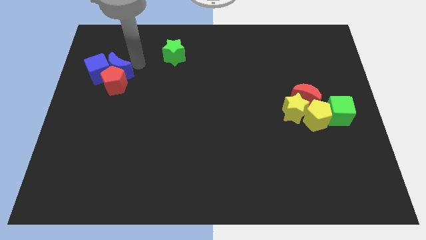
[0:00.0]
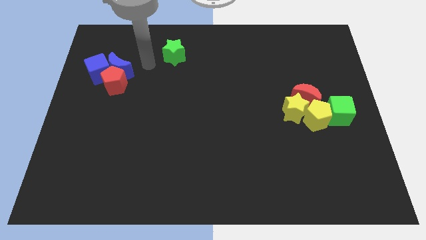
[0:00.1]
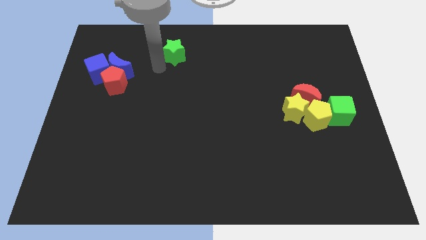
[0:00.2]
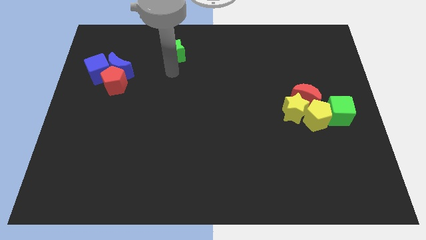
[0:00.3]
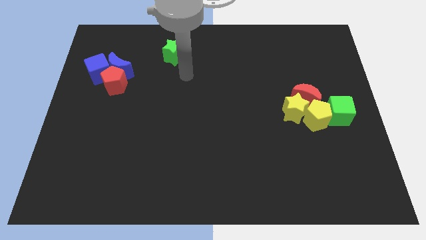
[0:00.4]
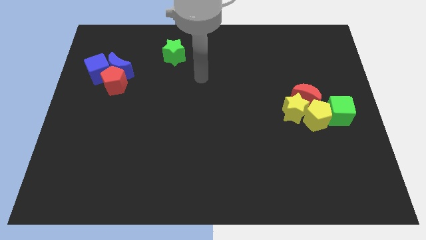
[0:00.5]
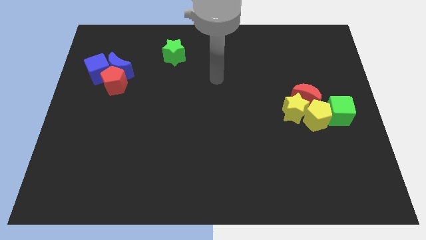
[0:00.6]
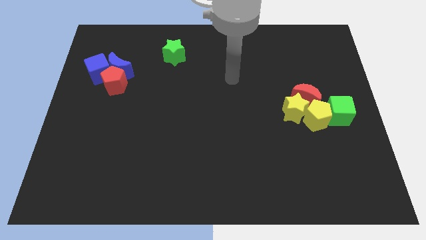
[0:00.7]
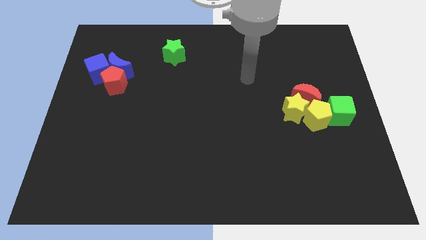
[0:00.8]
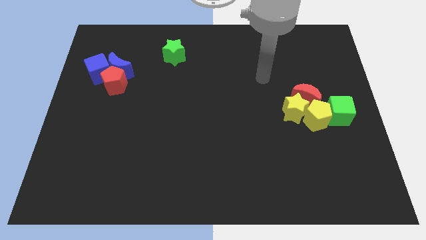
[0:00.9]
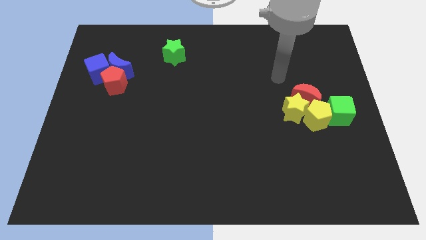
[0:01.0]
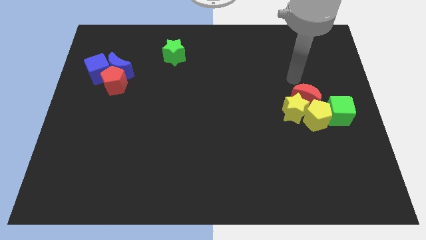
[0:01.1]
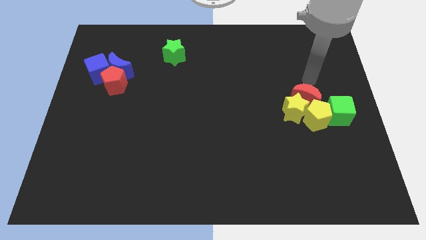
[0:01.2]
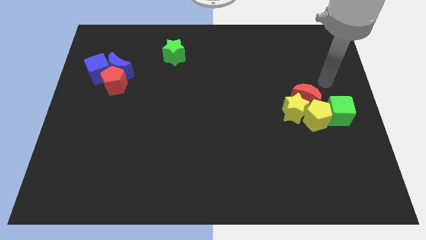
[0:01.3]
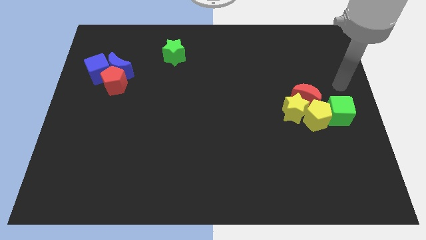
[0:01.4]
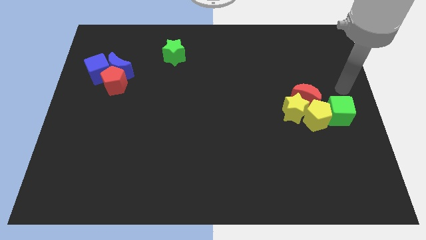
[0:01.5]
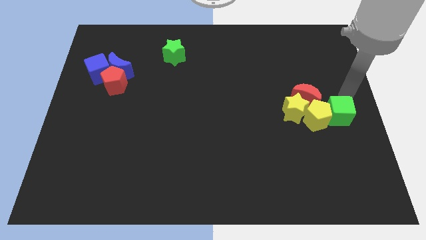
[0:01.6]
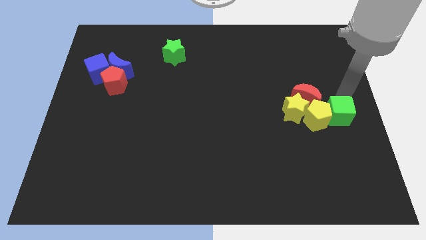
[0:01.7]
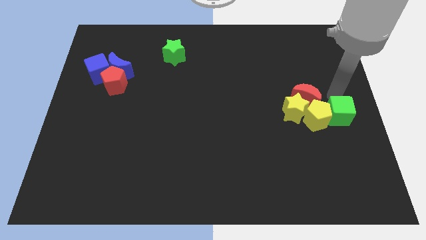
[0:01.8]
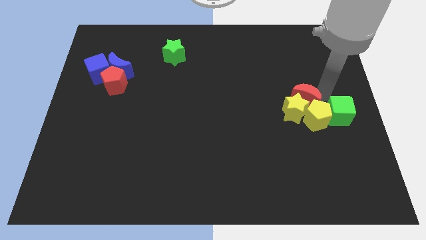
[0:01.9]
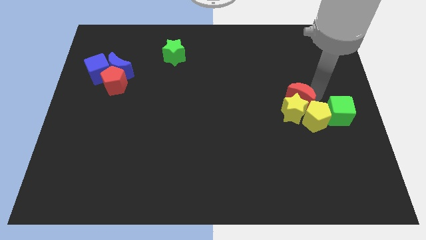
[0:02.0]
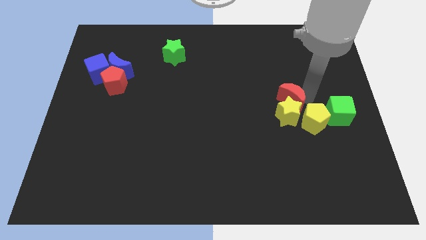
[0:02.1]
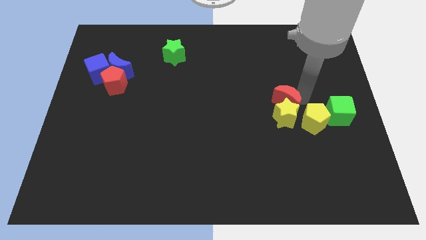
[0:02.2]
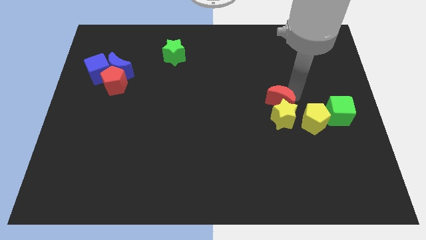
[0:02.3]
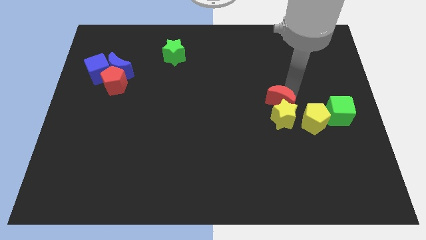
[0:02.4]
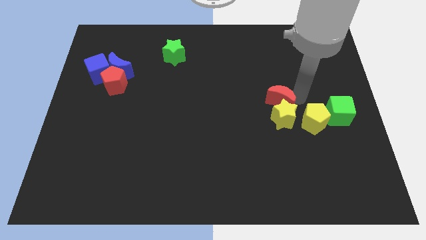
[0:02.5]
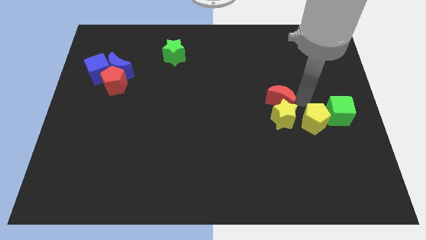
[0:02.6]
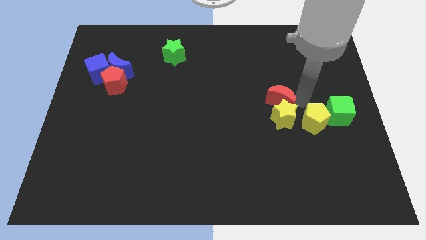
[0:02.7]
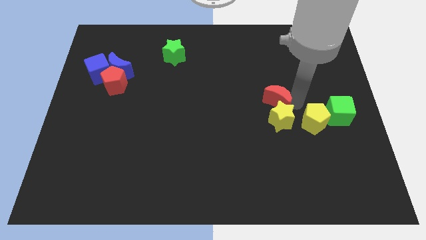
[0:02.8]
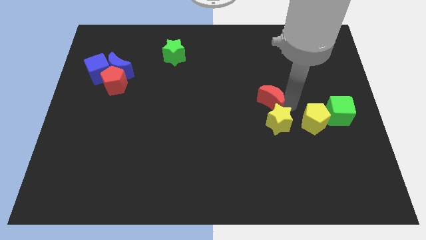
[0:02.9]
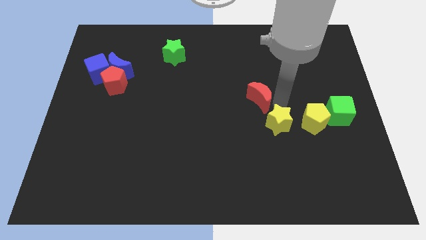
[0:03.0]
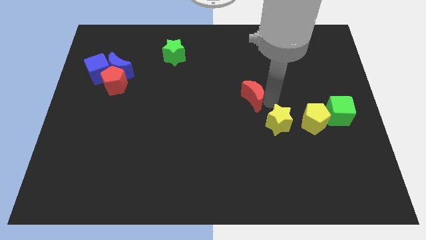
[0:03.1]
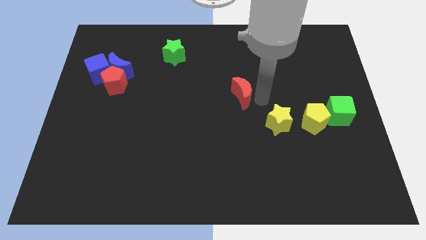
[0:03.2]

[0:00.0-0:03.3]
separate the red crescent and yellow star

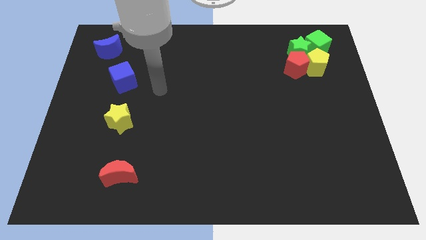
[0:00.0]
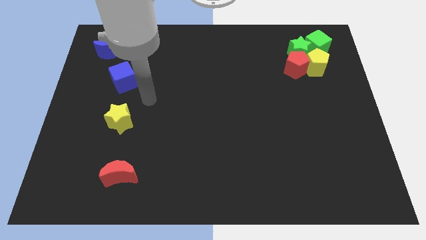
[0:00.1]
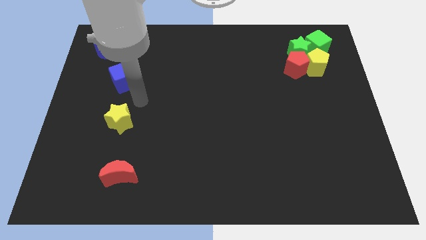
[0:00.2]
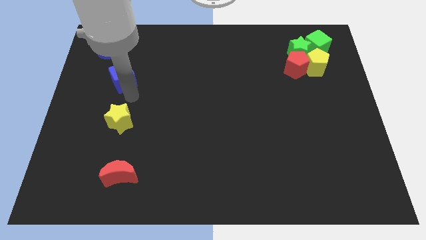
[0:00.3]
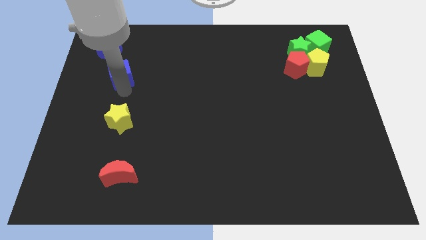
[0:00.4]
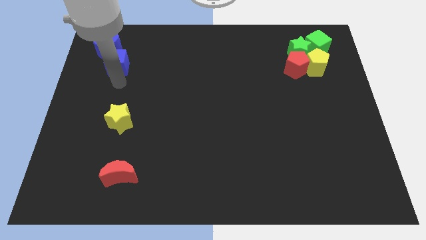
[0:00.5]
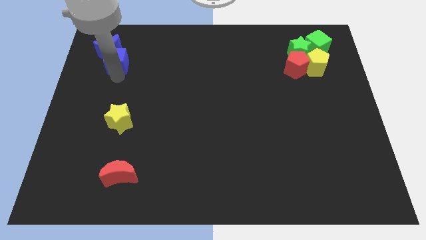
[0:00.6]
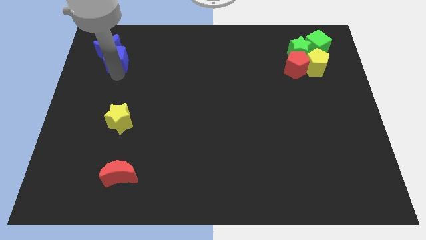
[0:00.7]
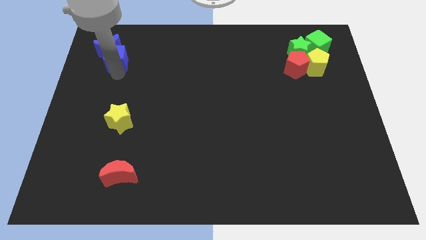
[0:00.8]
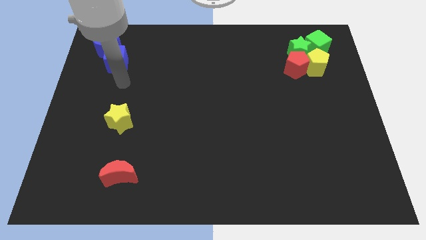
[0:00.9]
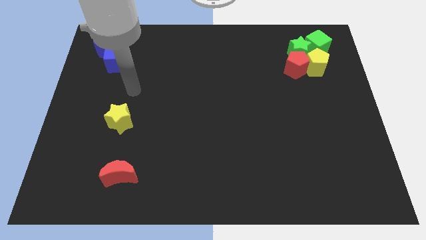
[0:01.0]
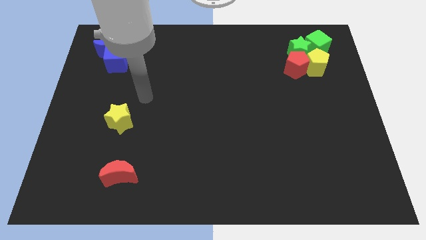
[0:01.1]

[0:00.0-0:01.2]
push the blue cube bottom right to the blue crescent

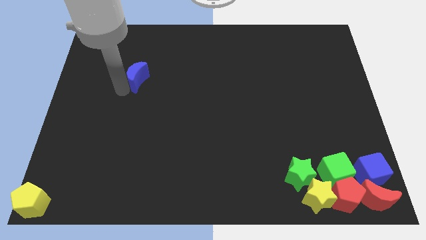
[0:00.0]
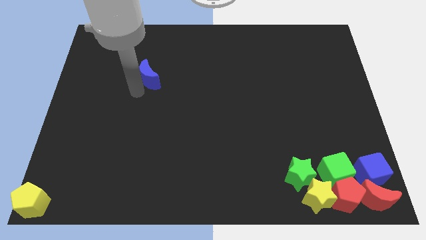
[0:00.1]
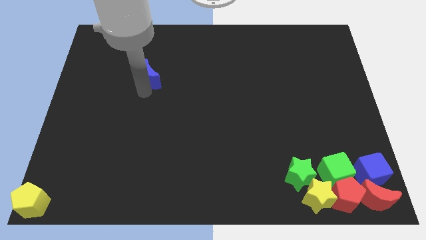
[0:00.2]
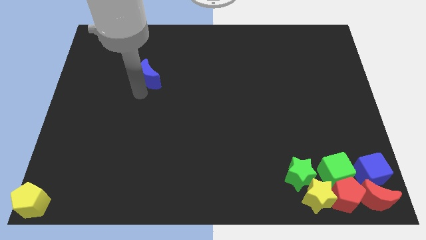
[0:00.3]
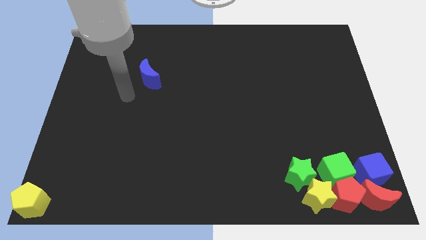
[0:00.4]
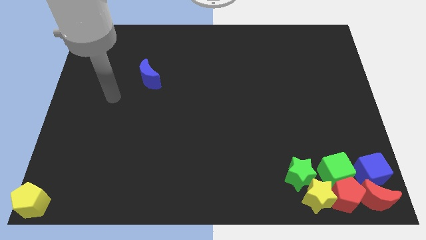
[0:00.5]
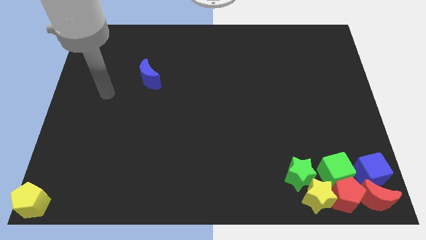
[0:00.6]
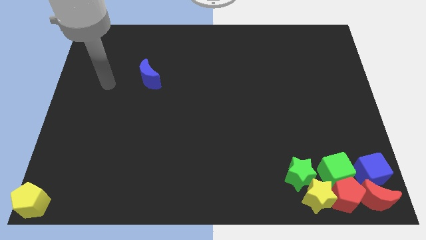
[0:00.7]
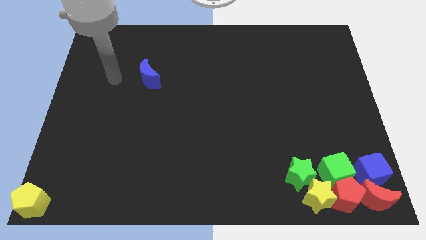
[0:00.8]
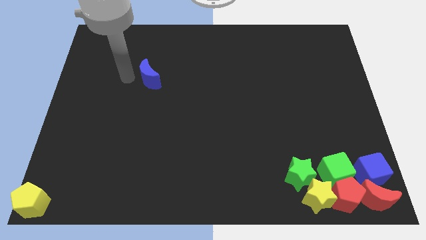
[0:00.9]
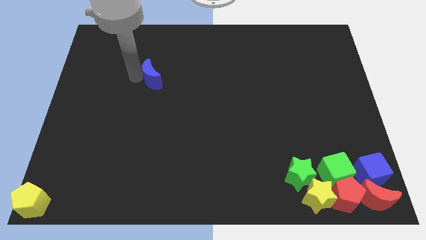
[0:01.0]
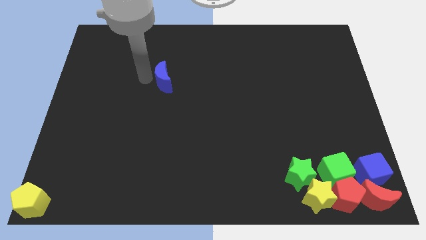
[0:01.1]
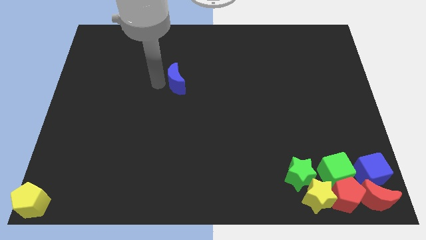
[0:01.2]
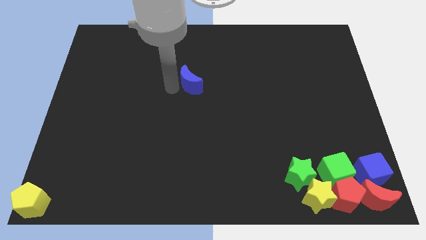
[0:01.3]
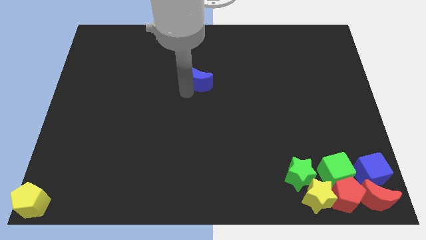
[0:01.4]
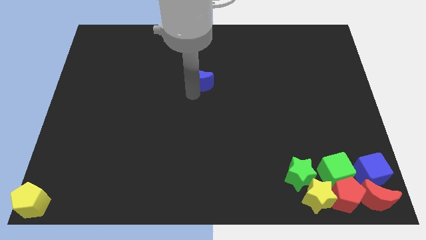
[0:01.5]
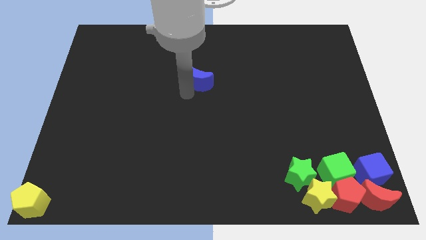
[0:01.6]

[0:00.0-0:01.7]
move the blue moon to the center of the board

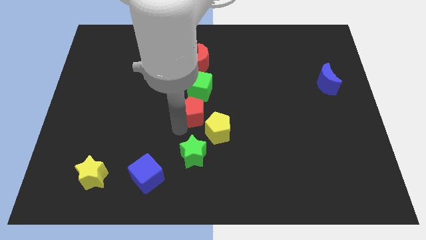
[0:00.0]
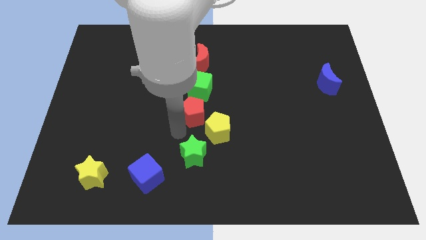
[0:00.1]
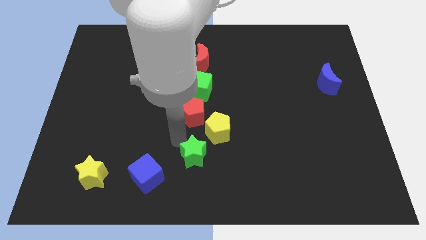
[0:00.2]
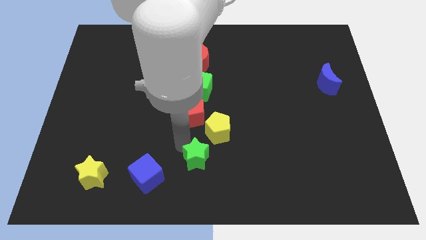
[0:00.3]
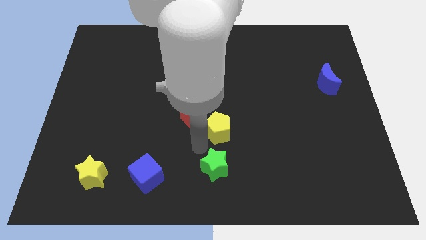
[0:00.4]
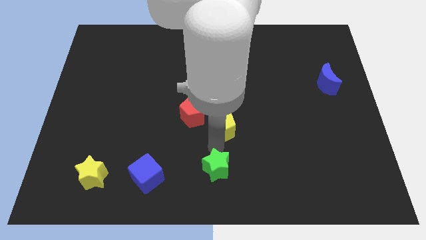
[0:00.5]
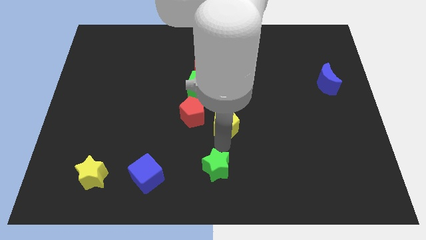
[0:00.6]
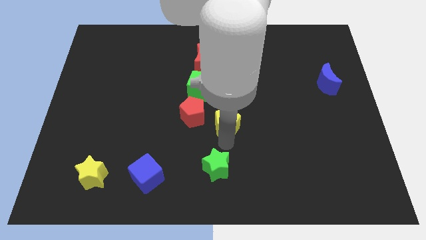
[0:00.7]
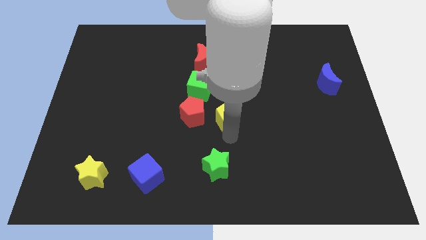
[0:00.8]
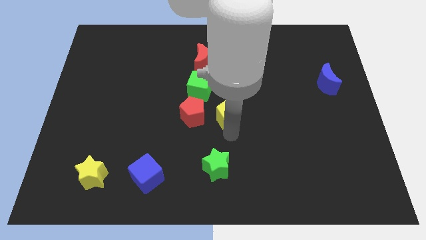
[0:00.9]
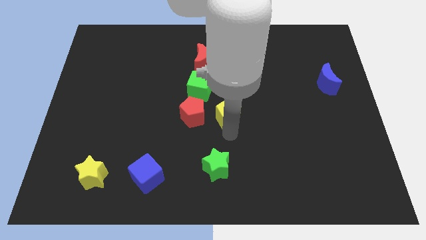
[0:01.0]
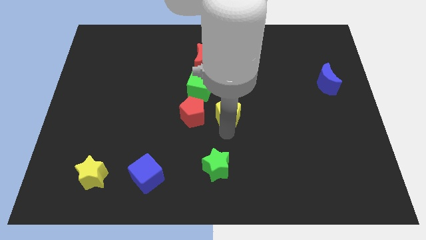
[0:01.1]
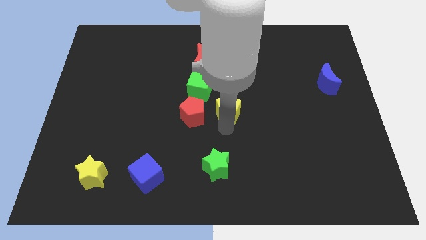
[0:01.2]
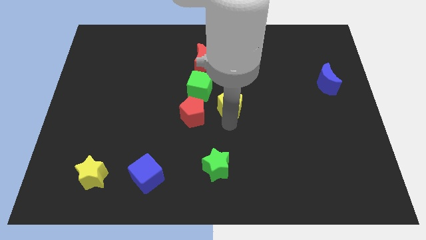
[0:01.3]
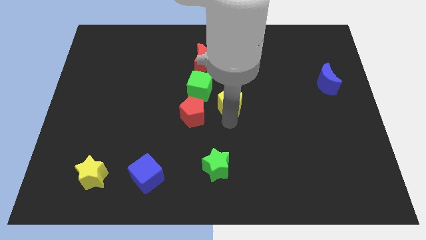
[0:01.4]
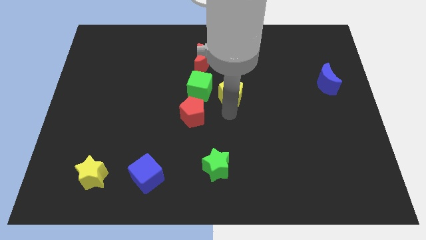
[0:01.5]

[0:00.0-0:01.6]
place the yellow pentagon to the right of the green cube

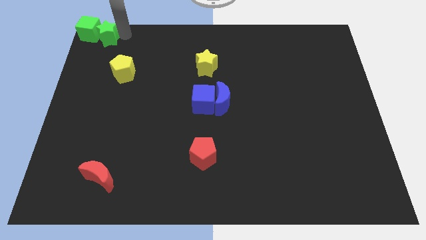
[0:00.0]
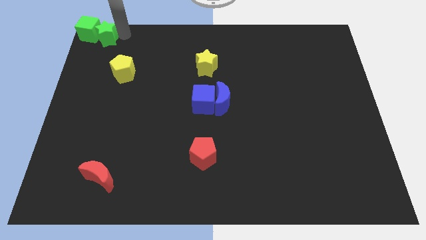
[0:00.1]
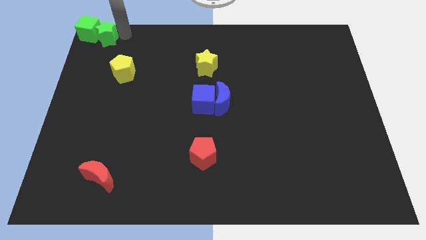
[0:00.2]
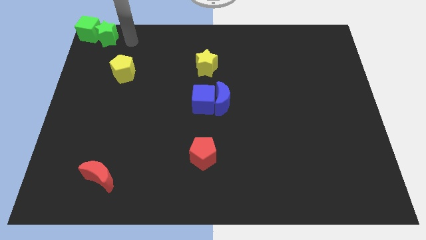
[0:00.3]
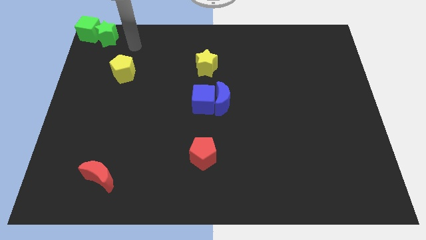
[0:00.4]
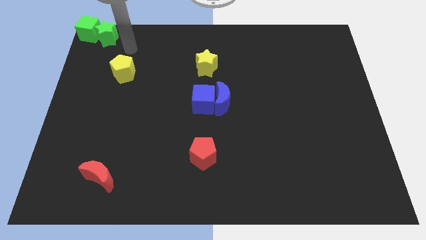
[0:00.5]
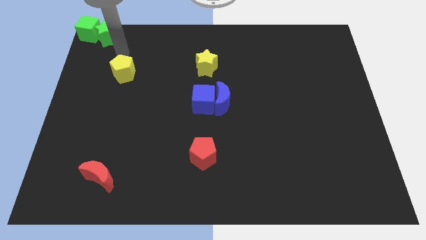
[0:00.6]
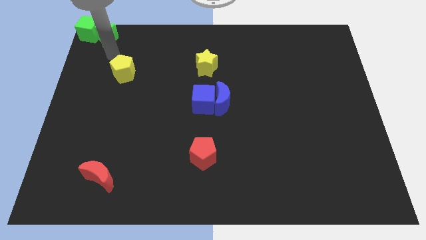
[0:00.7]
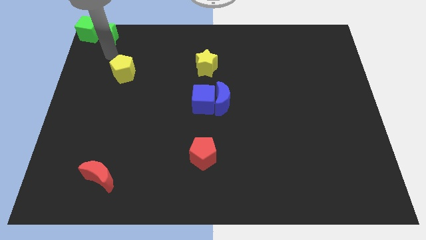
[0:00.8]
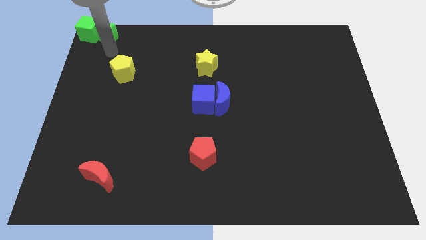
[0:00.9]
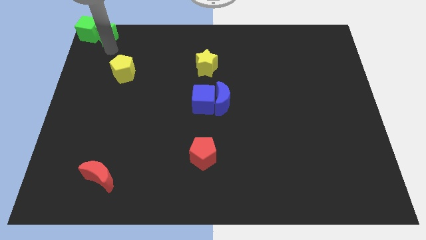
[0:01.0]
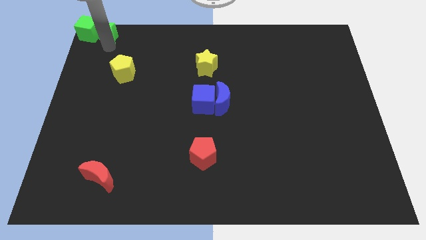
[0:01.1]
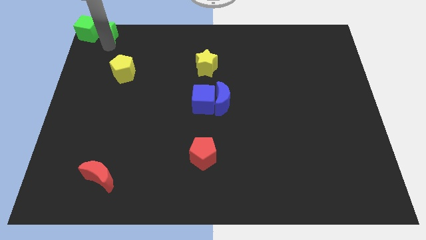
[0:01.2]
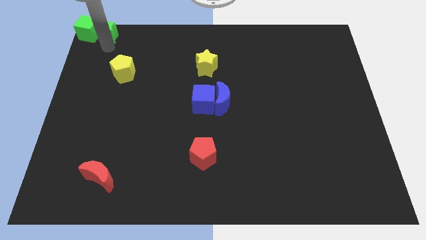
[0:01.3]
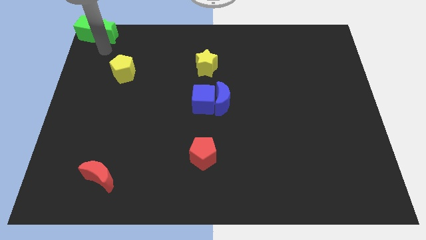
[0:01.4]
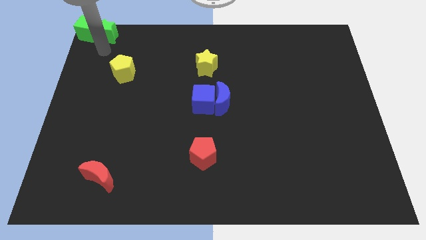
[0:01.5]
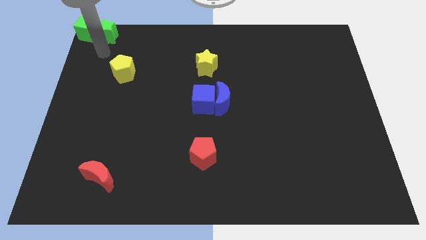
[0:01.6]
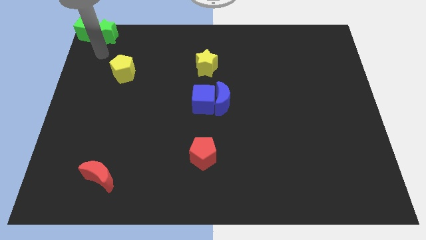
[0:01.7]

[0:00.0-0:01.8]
put your arm below the green star
